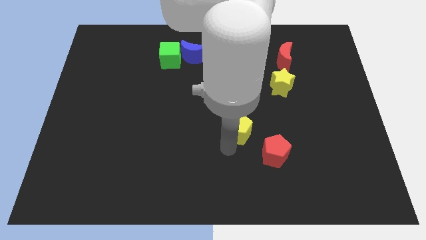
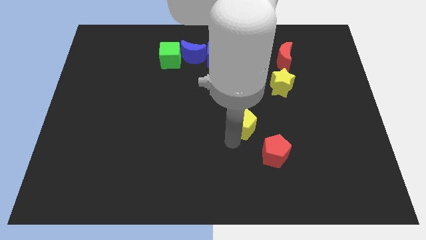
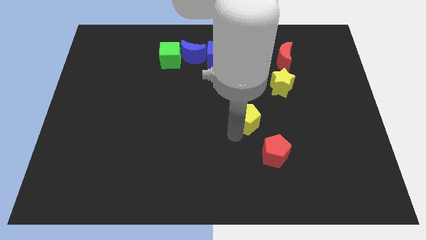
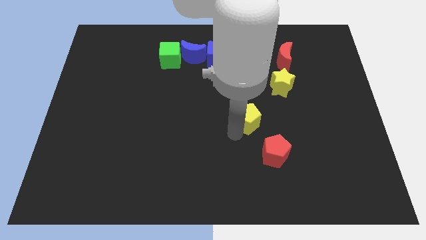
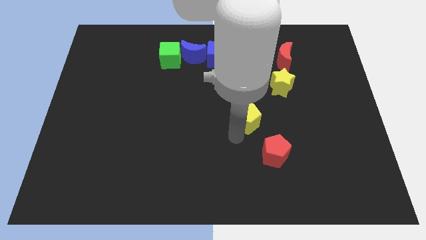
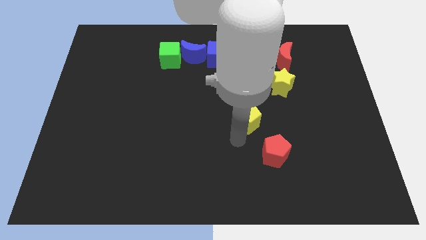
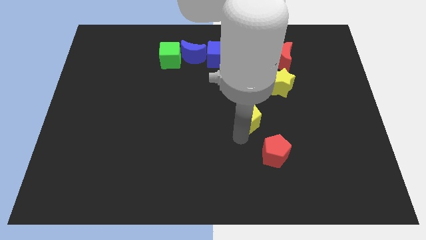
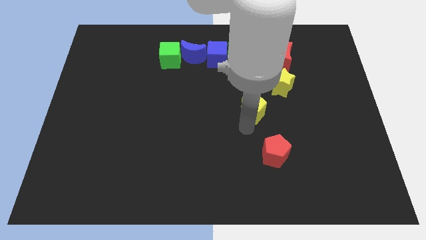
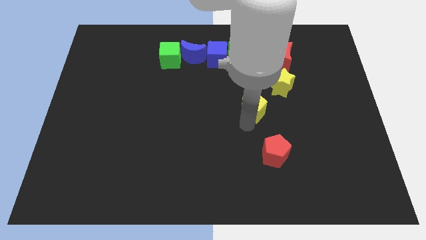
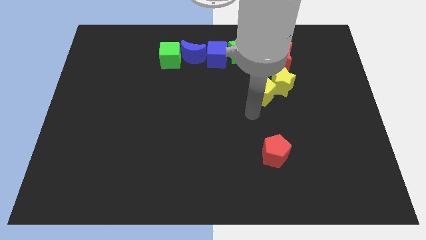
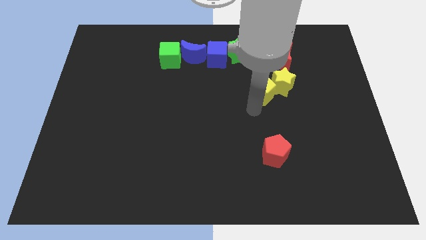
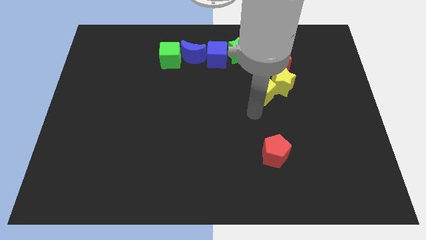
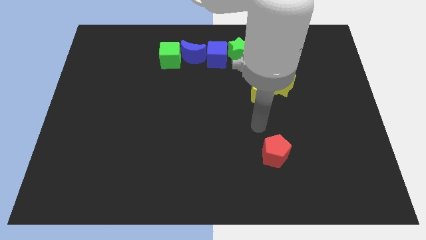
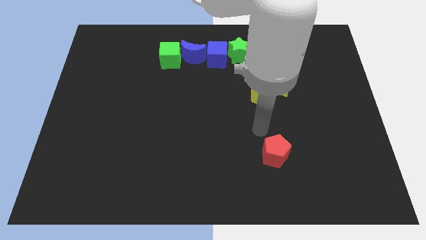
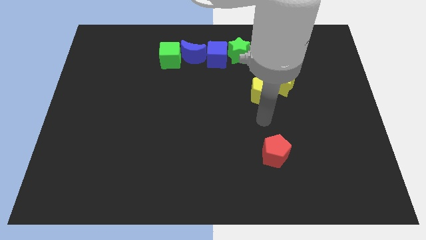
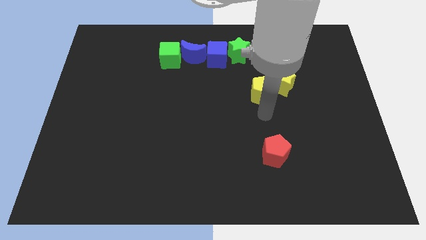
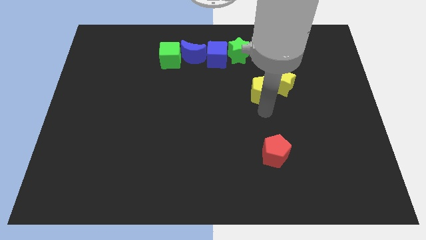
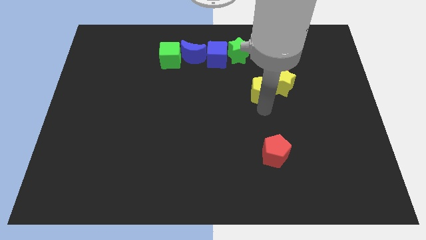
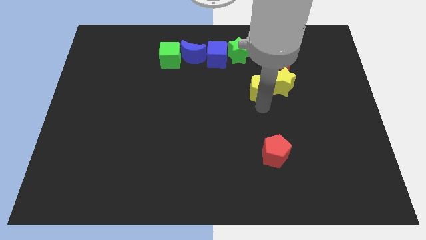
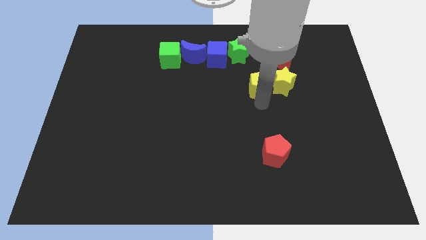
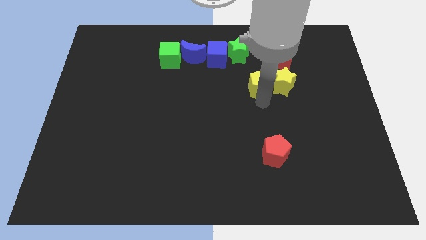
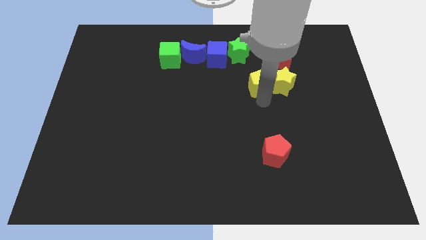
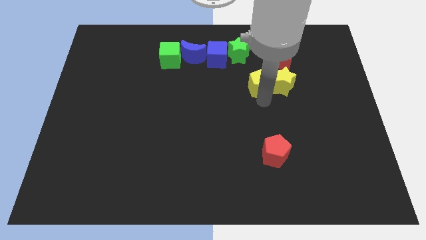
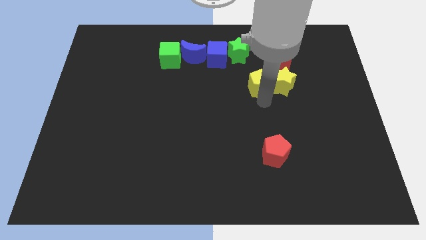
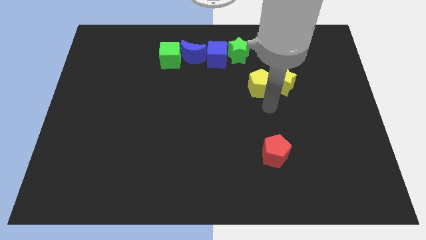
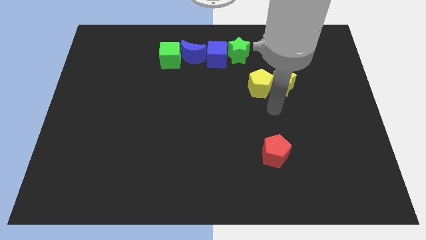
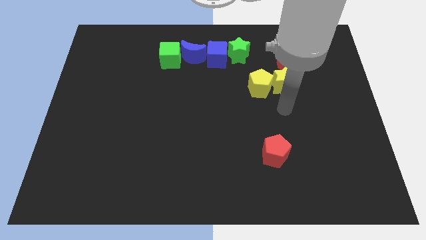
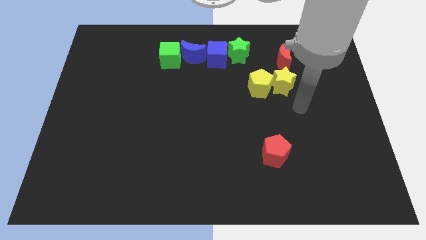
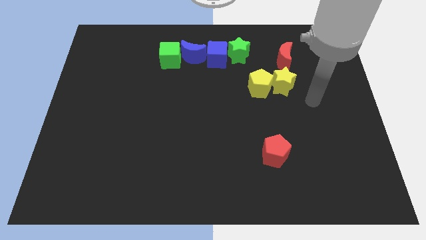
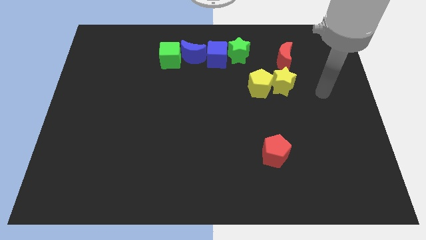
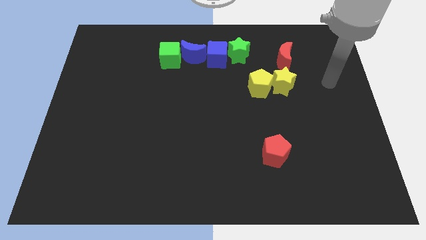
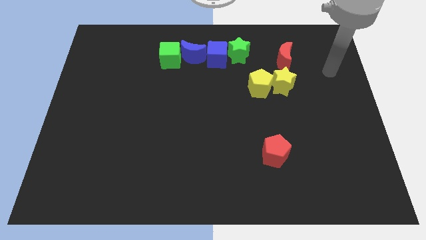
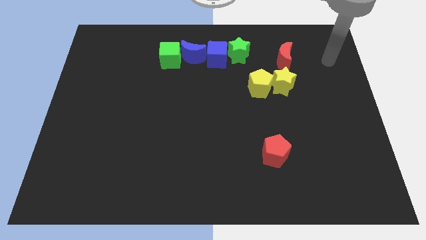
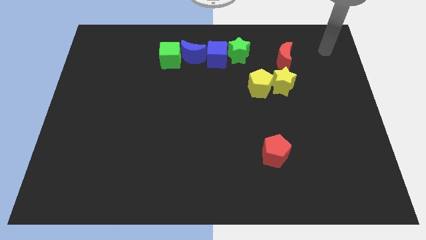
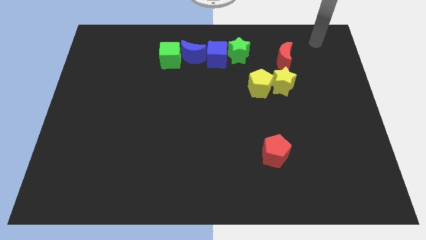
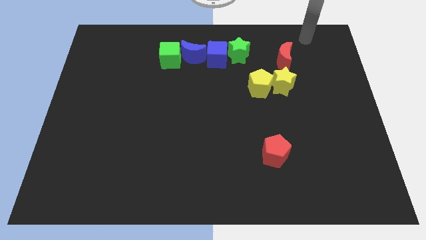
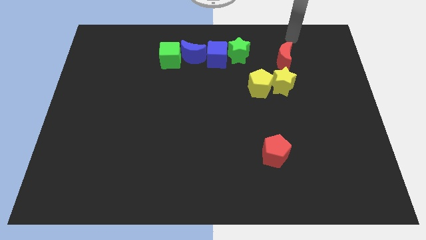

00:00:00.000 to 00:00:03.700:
push the yellow pentagon into the yellow star

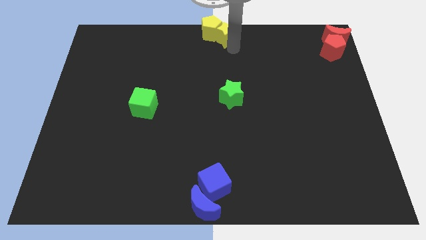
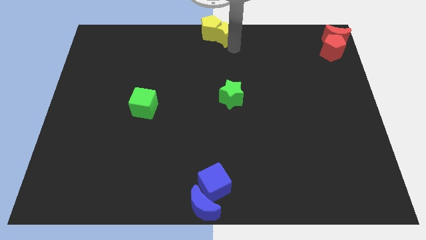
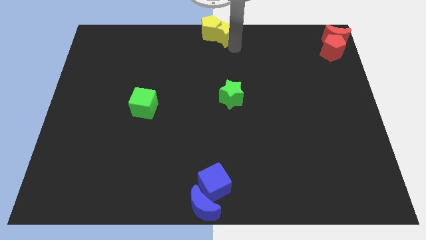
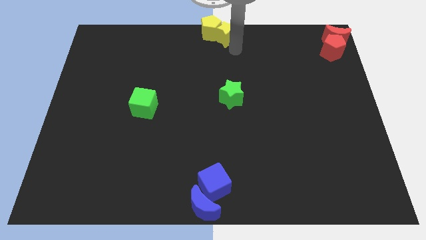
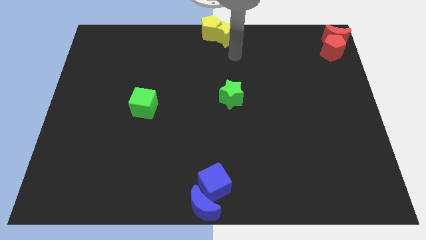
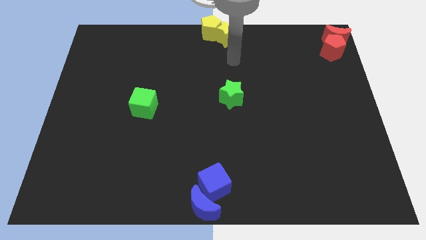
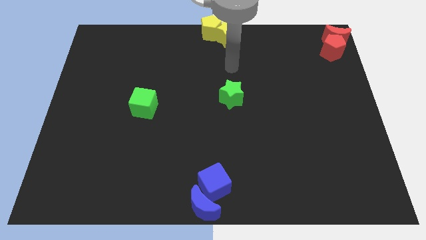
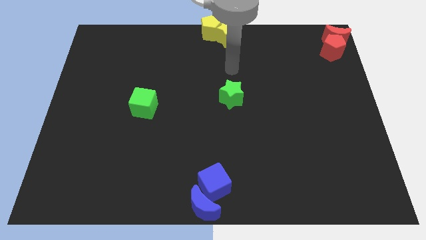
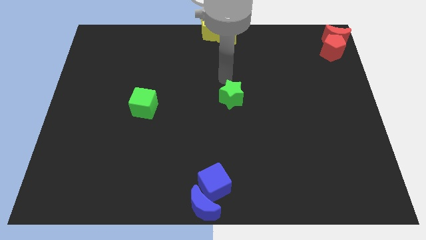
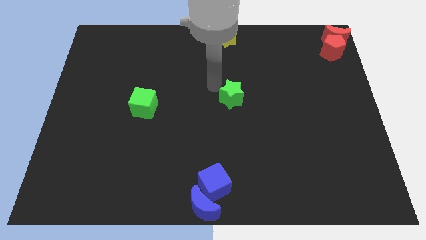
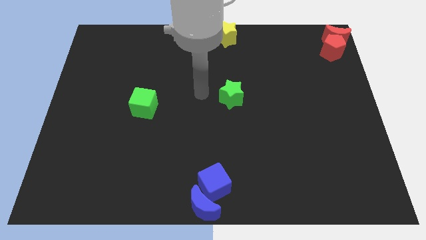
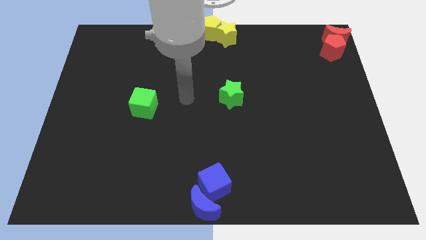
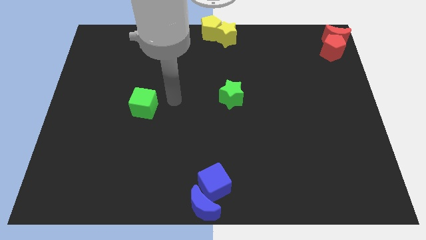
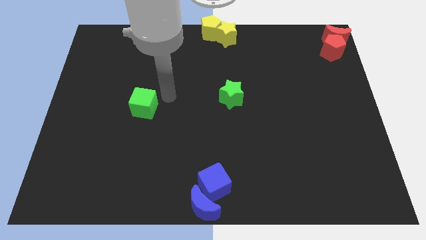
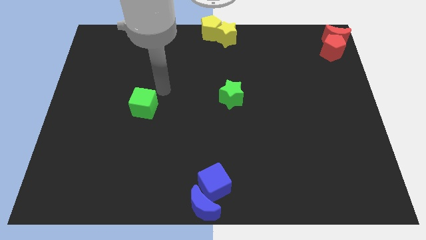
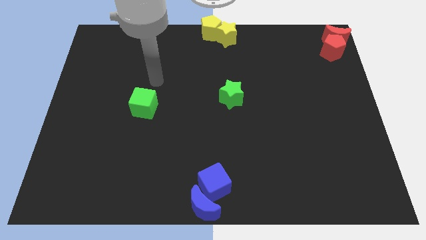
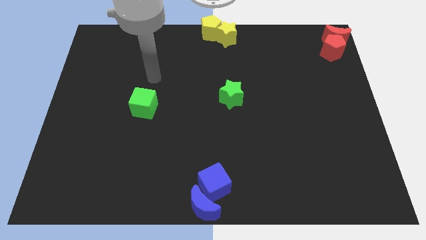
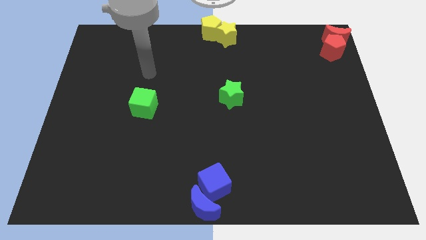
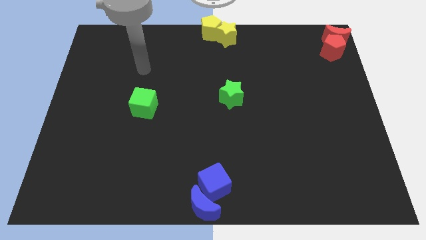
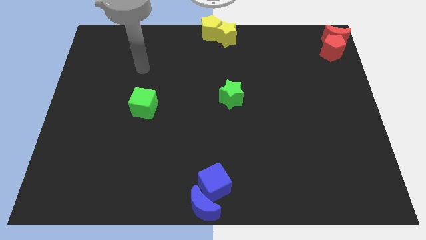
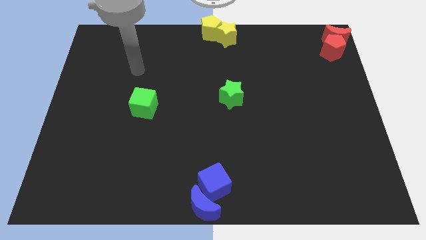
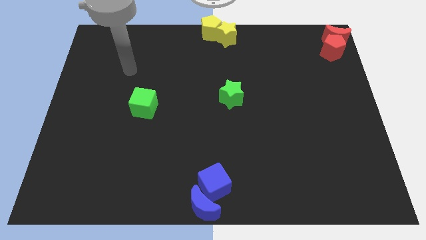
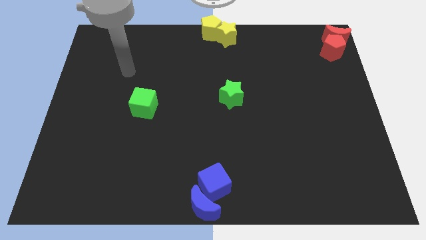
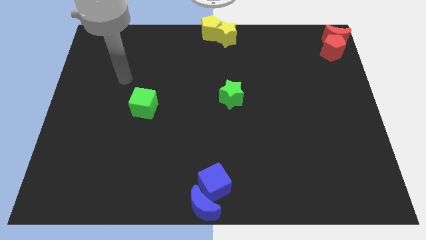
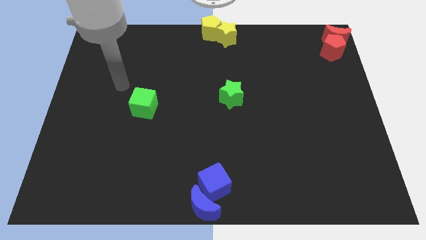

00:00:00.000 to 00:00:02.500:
place the yellow star close to the yellow pentagon

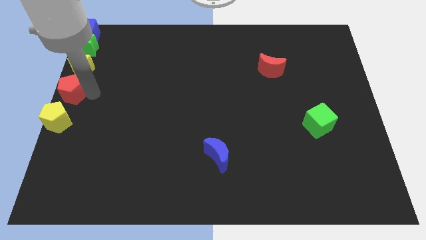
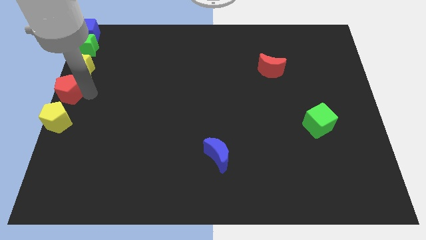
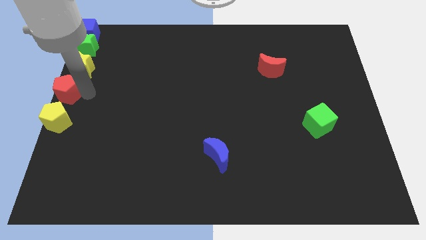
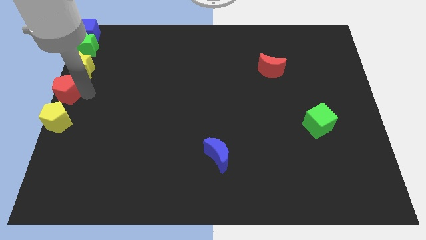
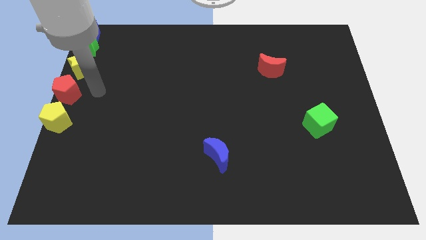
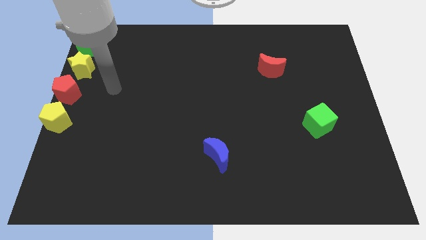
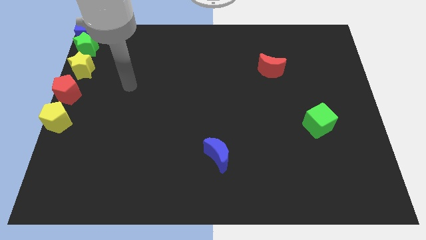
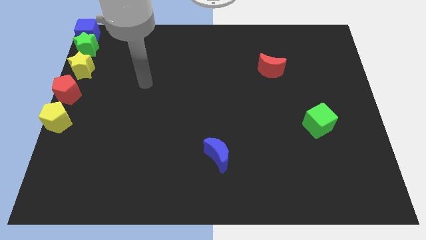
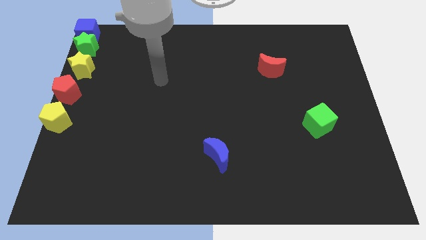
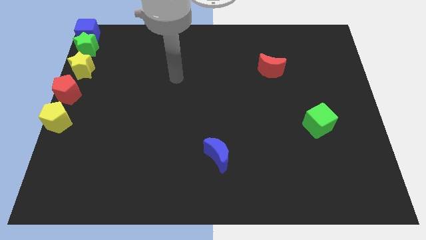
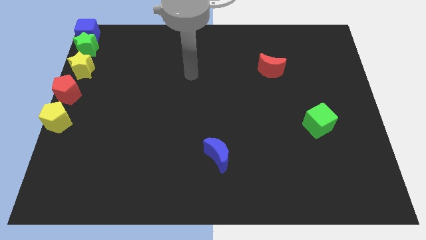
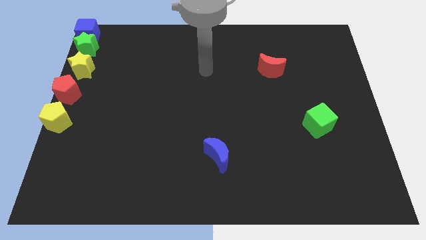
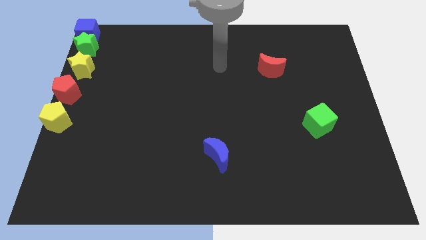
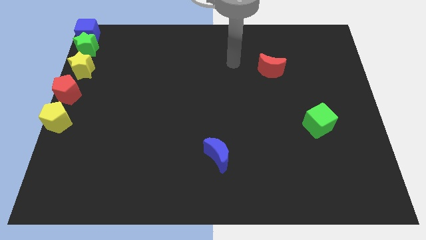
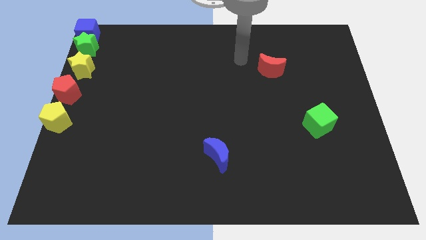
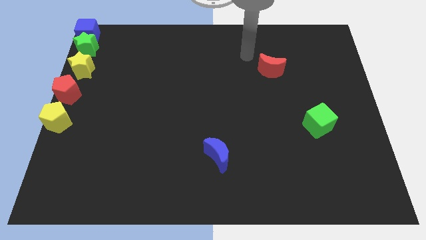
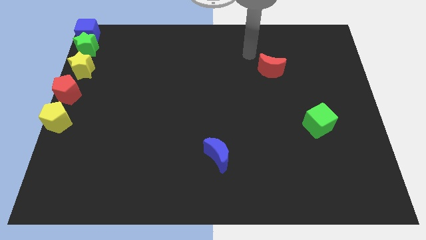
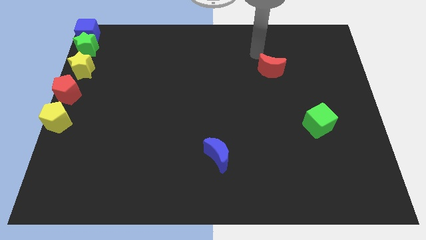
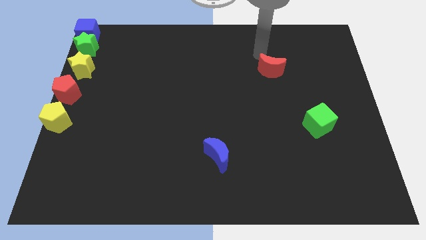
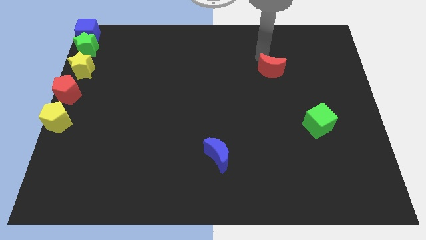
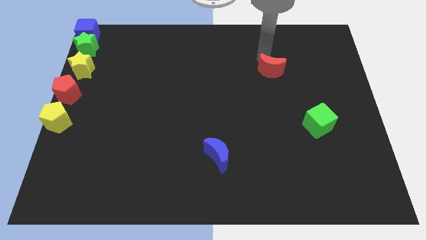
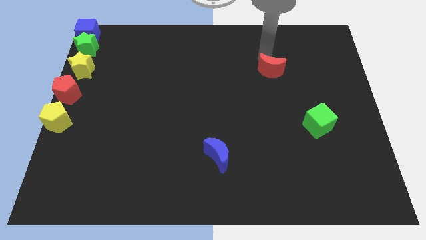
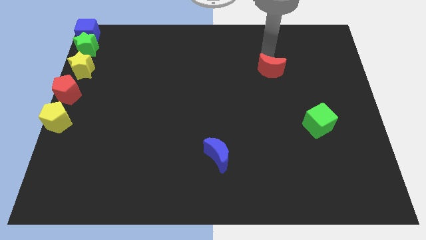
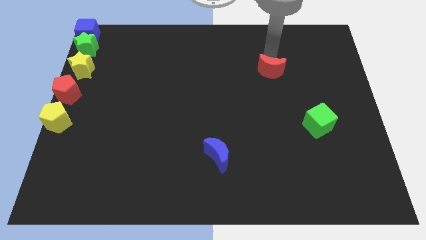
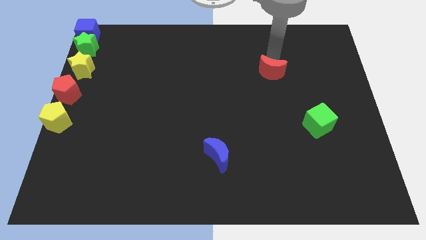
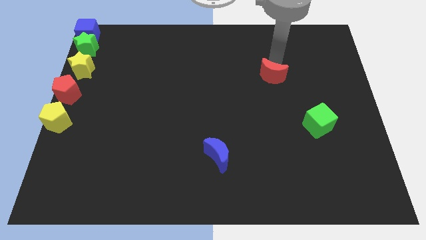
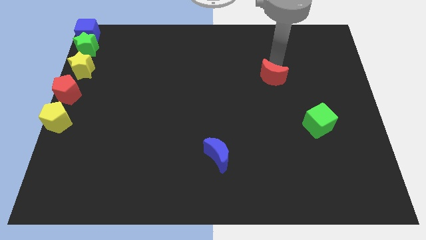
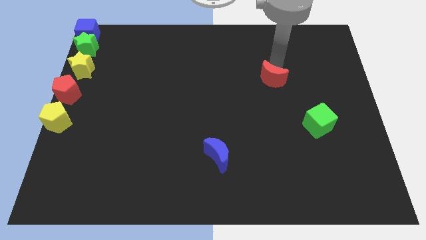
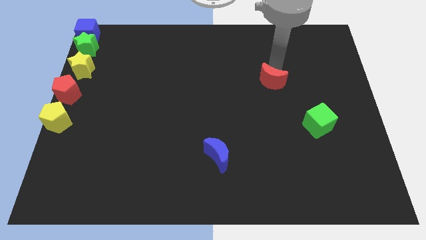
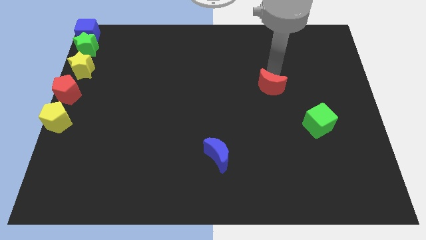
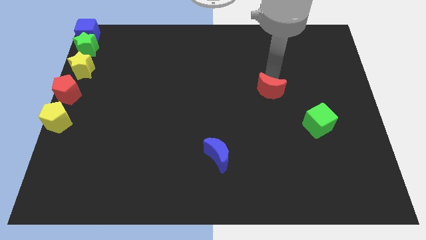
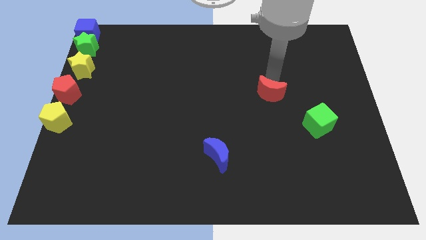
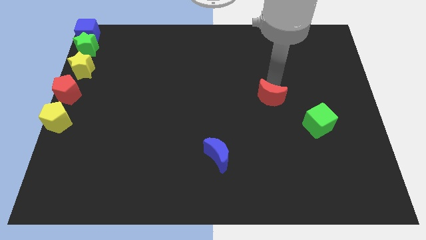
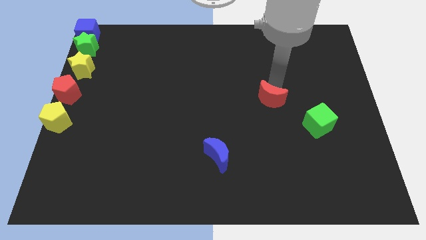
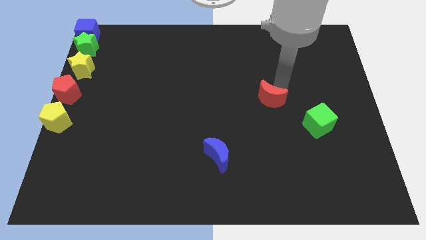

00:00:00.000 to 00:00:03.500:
slightly push the red moon downward
